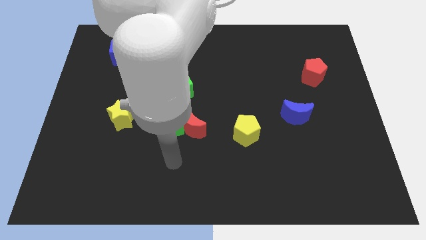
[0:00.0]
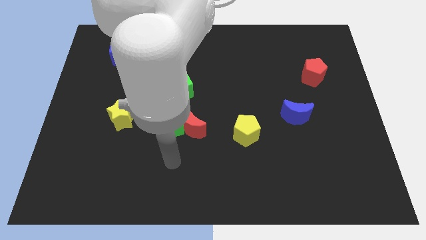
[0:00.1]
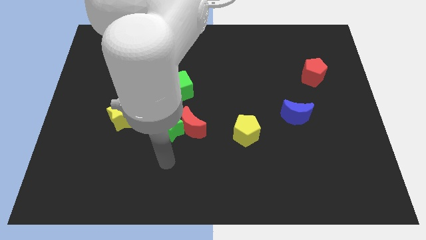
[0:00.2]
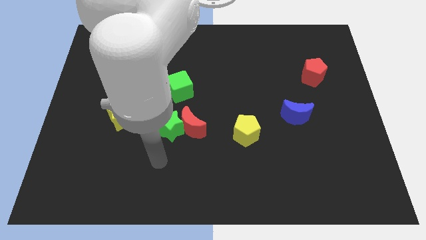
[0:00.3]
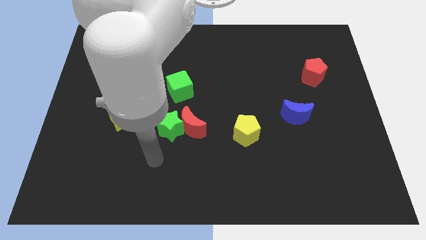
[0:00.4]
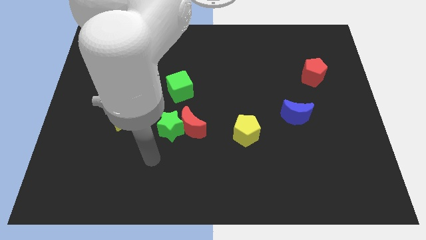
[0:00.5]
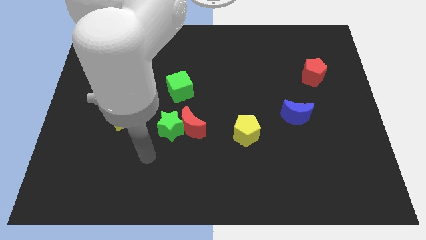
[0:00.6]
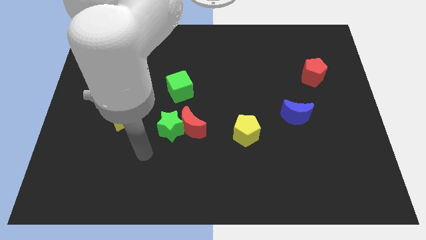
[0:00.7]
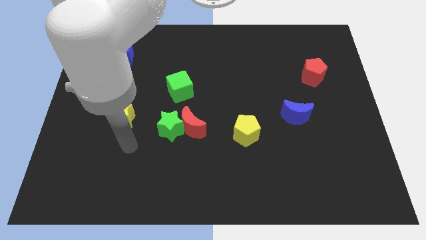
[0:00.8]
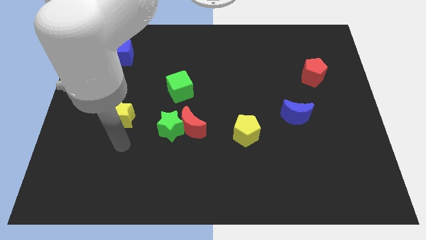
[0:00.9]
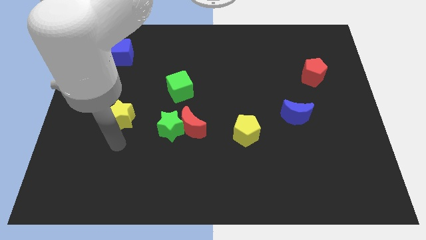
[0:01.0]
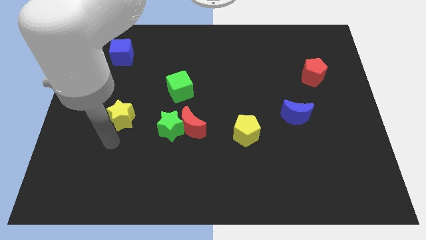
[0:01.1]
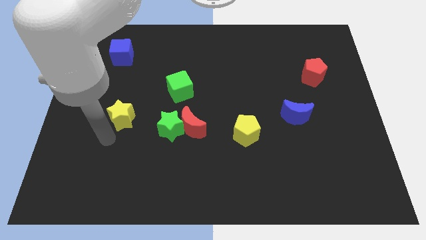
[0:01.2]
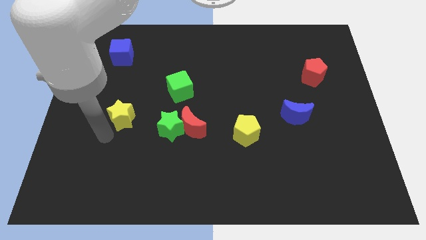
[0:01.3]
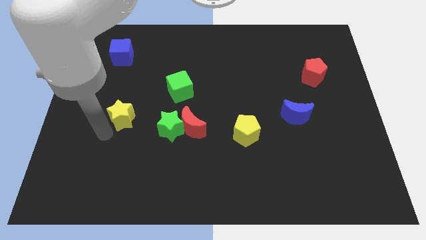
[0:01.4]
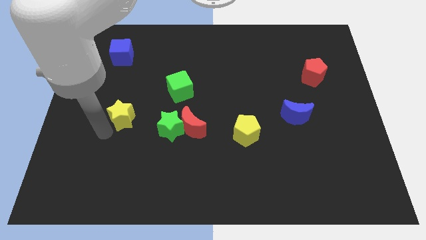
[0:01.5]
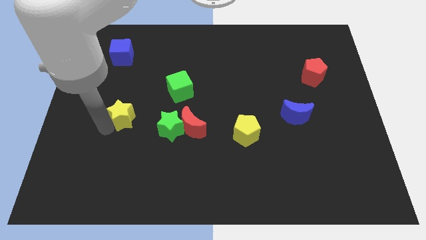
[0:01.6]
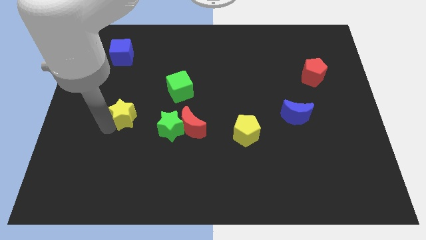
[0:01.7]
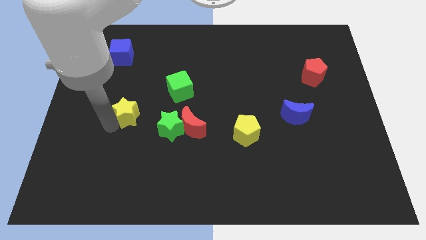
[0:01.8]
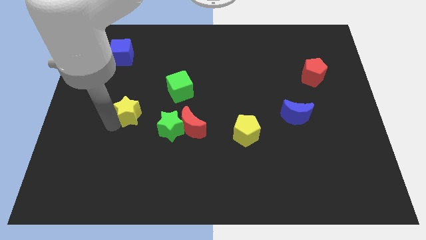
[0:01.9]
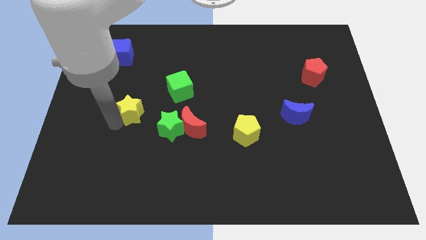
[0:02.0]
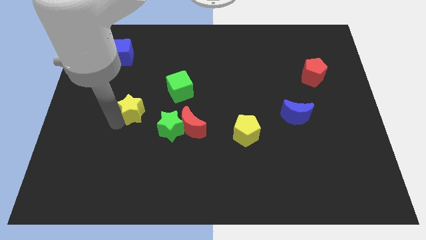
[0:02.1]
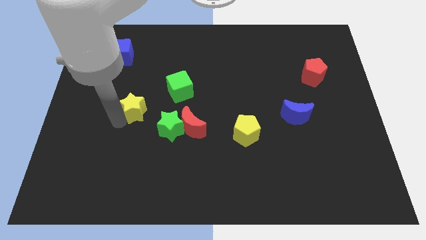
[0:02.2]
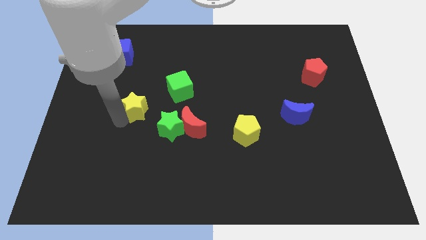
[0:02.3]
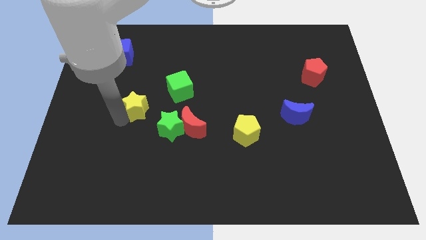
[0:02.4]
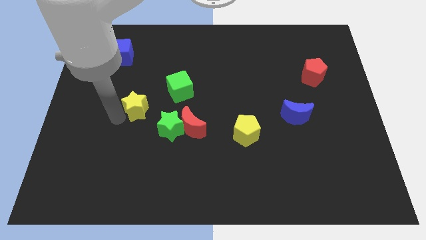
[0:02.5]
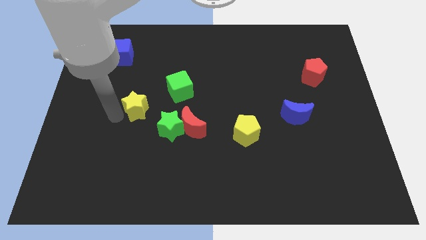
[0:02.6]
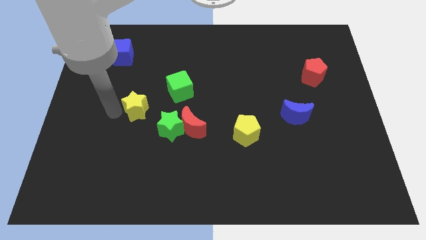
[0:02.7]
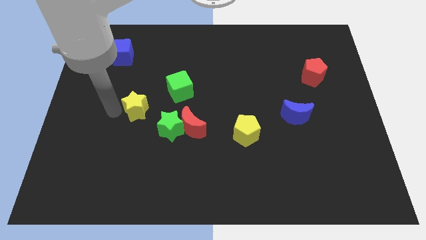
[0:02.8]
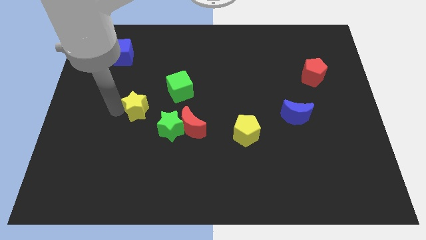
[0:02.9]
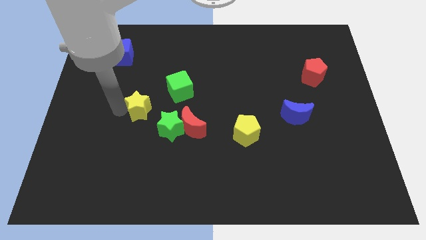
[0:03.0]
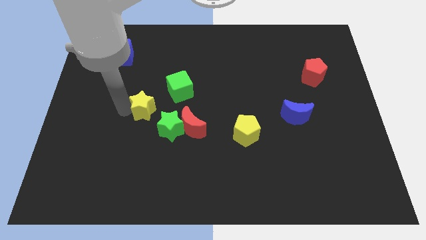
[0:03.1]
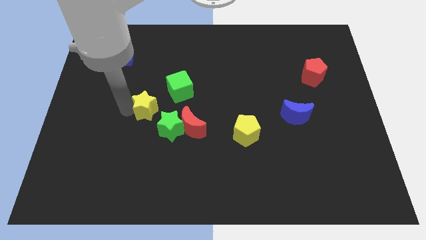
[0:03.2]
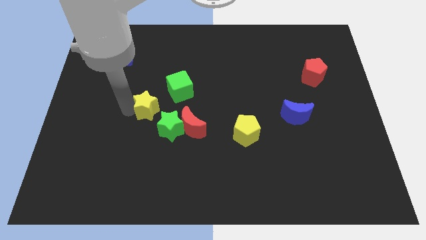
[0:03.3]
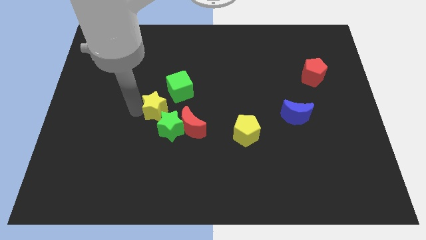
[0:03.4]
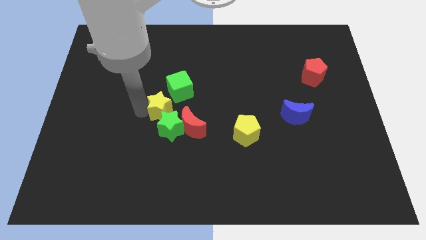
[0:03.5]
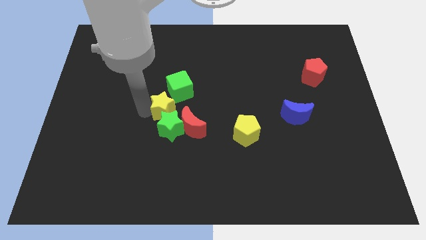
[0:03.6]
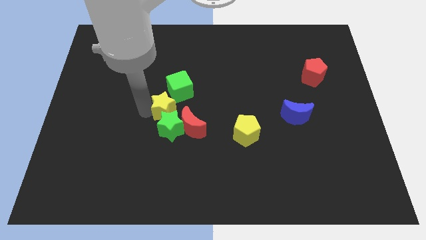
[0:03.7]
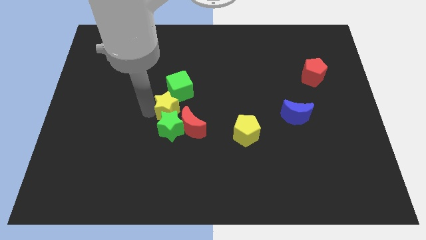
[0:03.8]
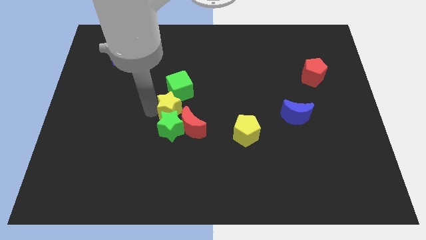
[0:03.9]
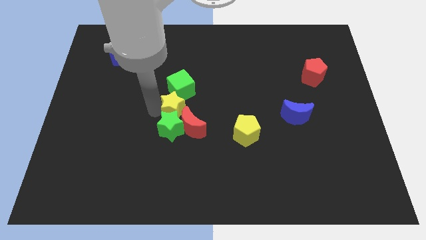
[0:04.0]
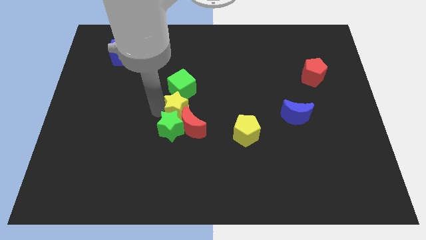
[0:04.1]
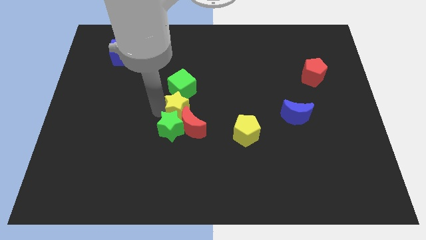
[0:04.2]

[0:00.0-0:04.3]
slide the yellow star to the red moon

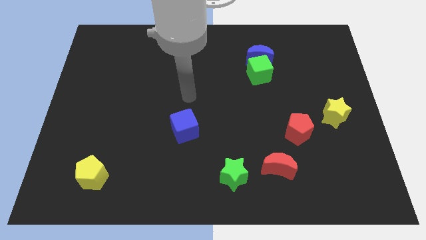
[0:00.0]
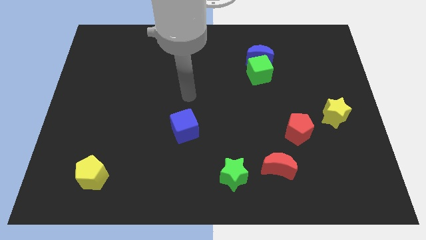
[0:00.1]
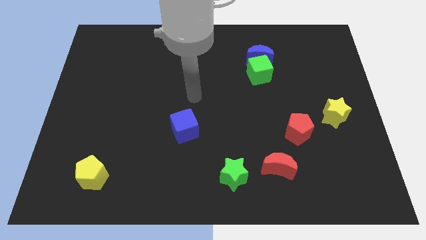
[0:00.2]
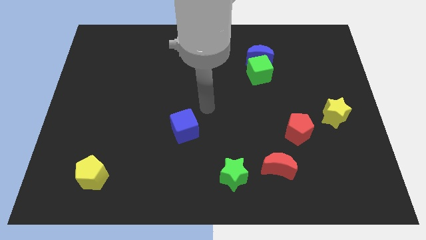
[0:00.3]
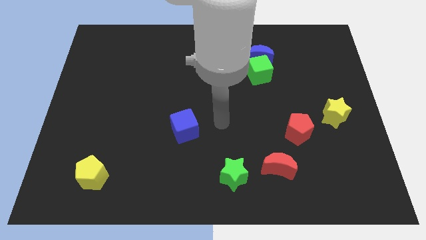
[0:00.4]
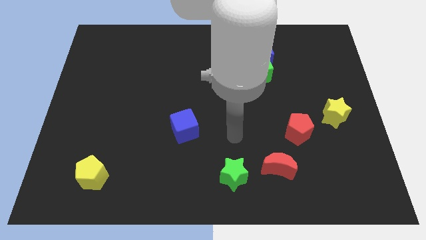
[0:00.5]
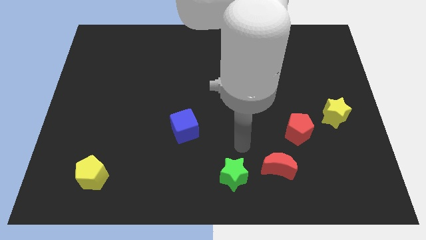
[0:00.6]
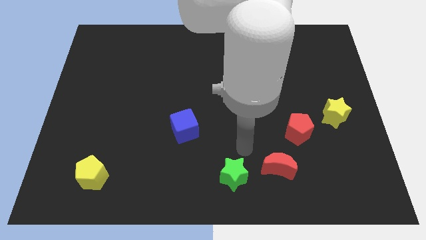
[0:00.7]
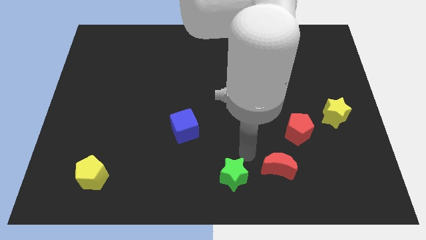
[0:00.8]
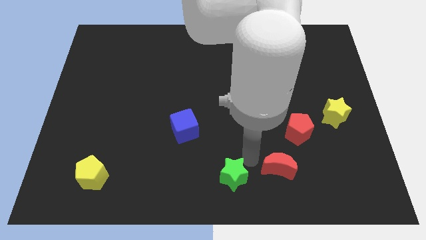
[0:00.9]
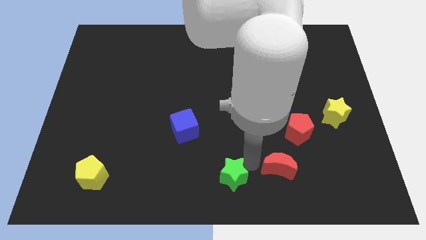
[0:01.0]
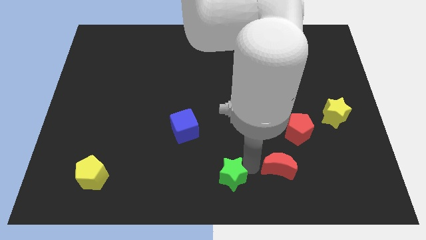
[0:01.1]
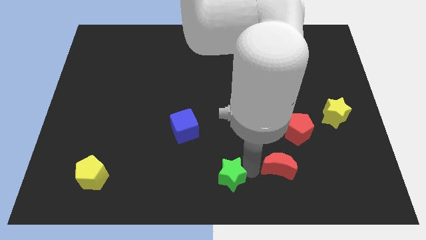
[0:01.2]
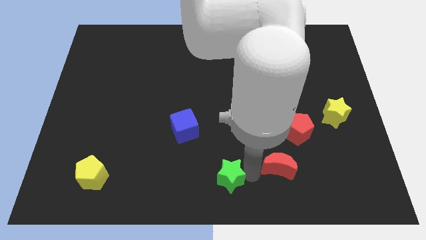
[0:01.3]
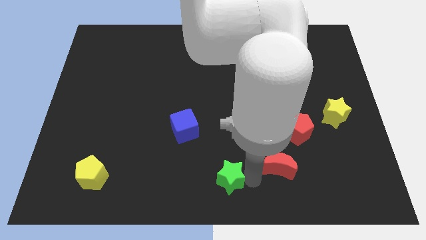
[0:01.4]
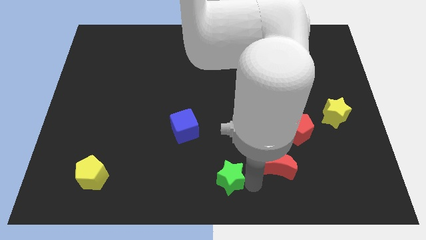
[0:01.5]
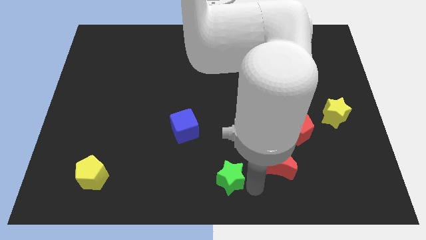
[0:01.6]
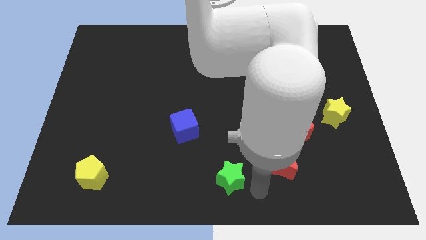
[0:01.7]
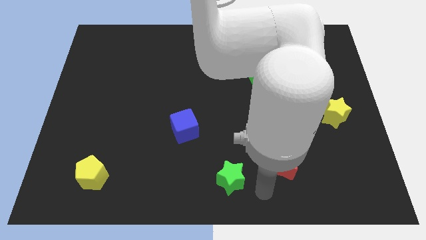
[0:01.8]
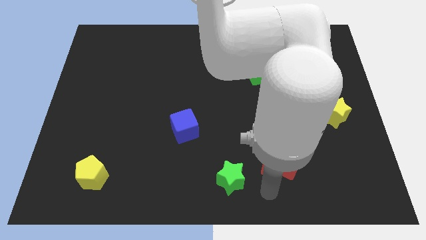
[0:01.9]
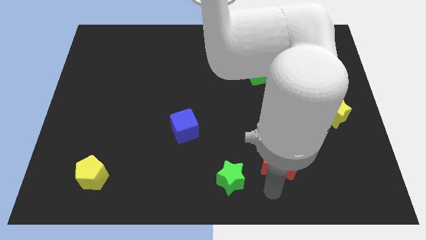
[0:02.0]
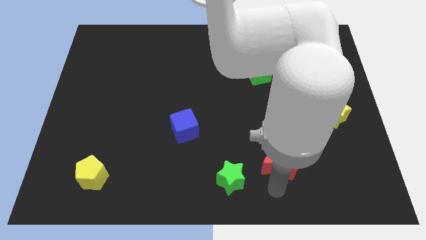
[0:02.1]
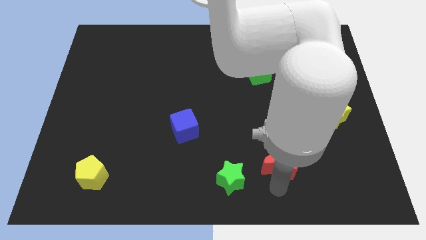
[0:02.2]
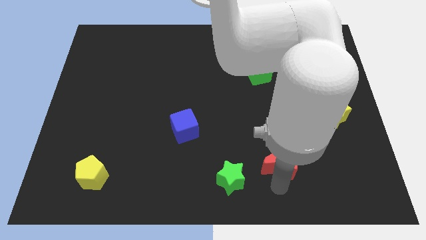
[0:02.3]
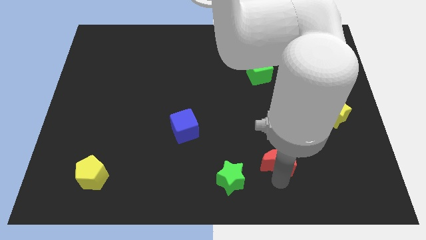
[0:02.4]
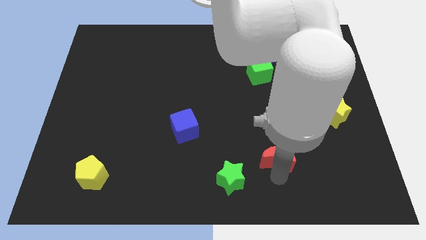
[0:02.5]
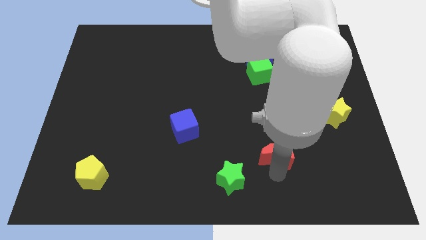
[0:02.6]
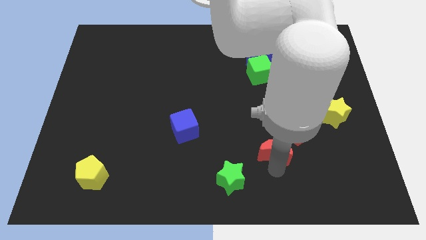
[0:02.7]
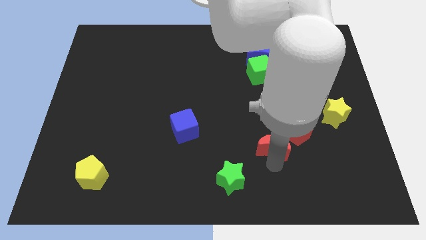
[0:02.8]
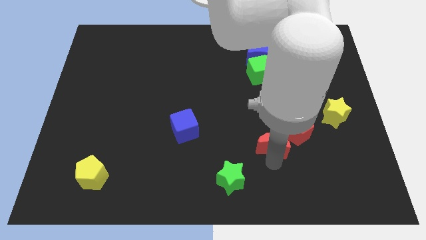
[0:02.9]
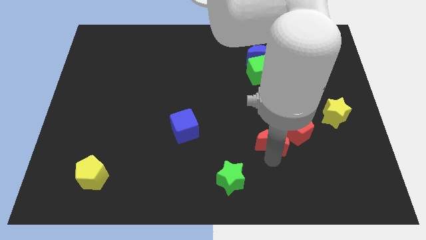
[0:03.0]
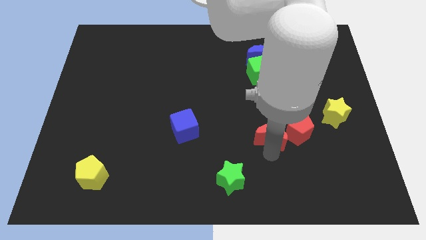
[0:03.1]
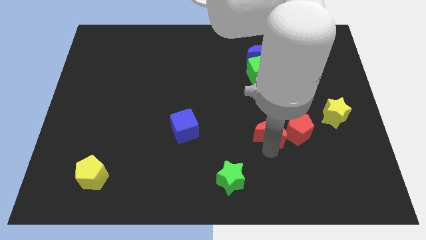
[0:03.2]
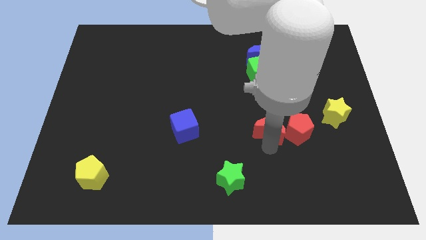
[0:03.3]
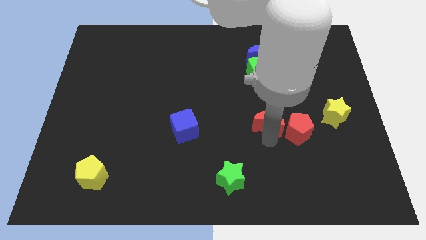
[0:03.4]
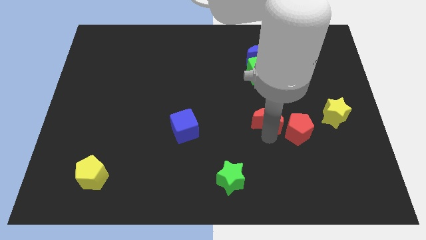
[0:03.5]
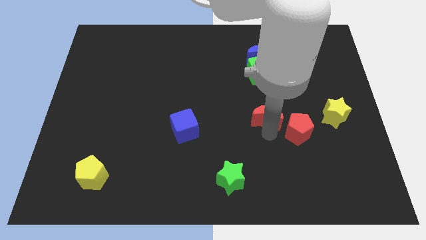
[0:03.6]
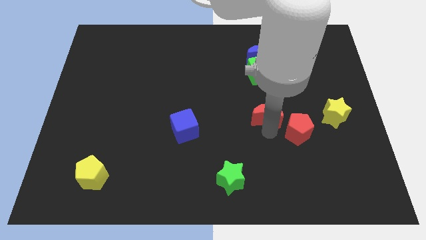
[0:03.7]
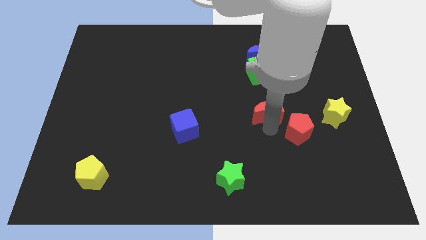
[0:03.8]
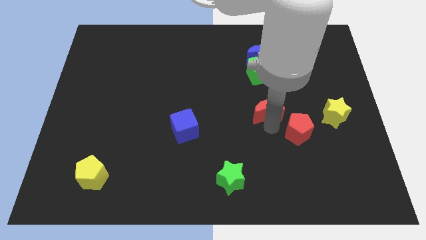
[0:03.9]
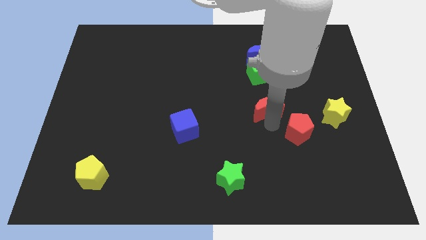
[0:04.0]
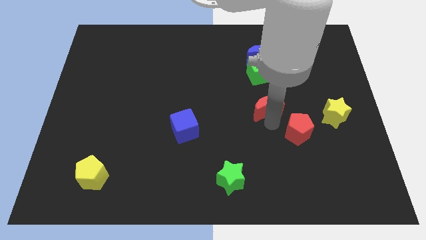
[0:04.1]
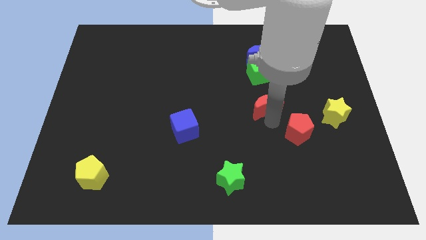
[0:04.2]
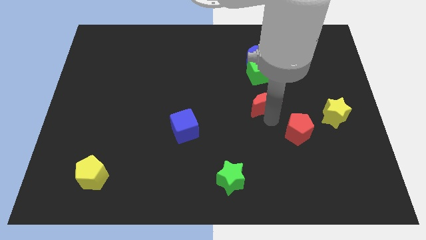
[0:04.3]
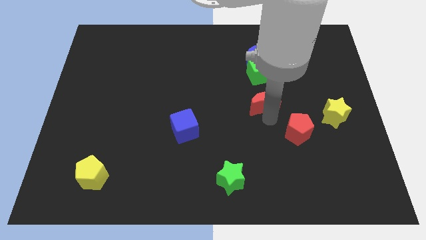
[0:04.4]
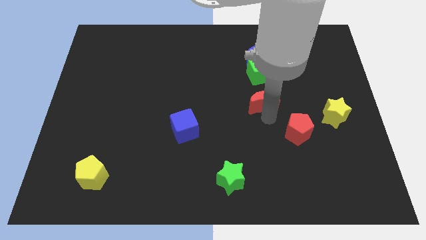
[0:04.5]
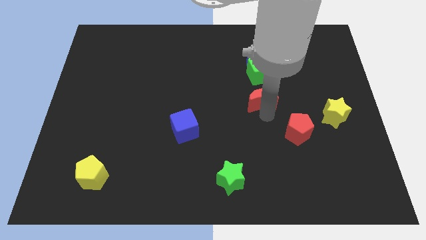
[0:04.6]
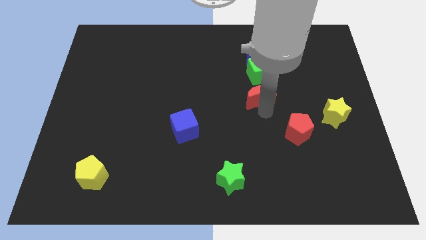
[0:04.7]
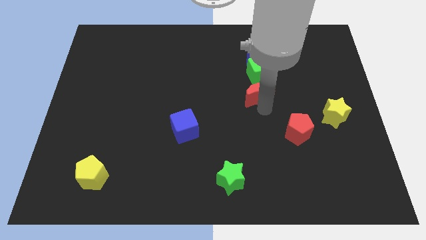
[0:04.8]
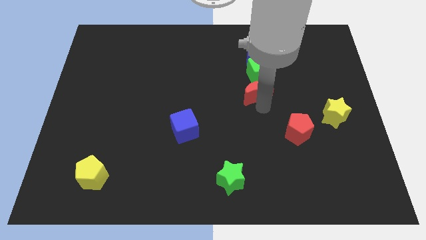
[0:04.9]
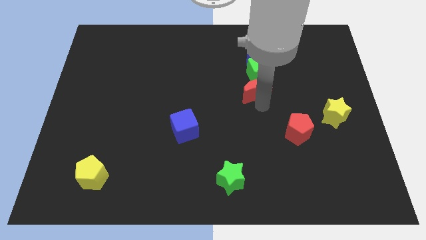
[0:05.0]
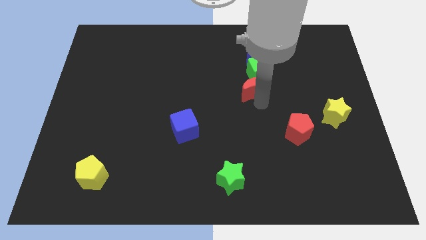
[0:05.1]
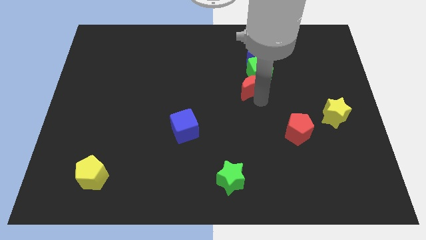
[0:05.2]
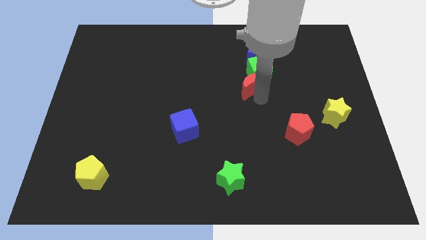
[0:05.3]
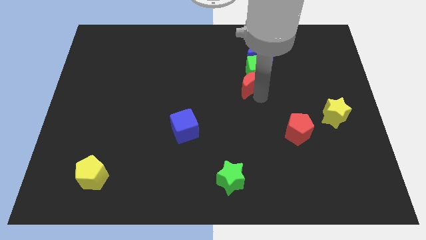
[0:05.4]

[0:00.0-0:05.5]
push the red moon close to the green cube
